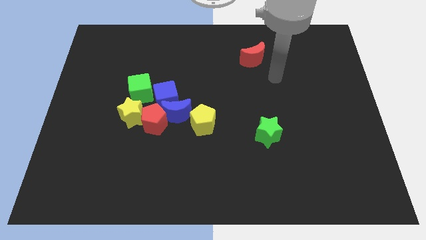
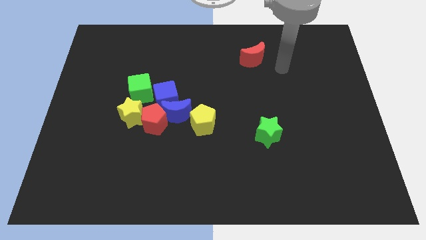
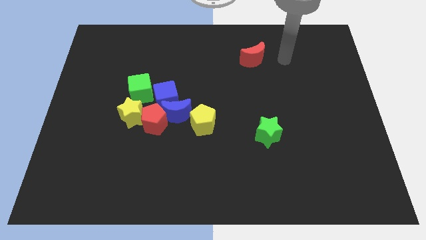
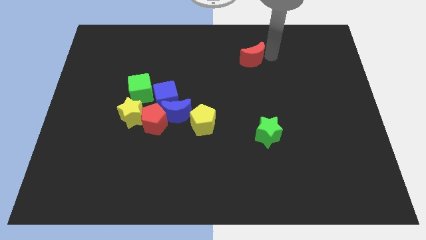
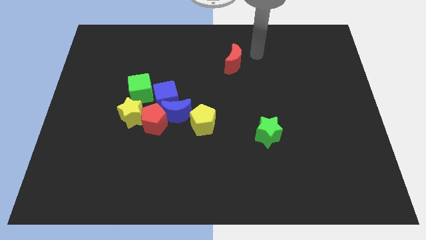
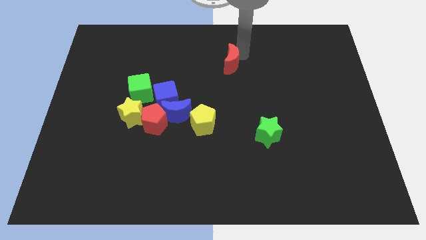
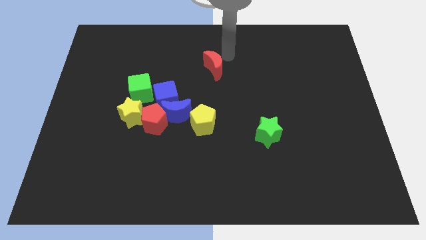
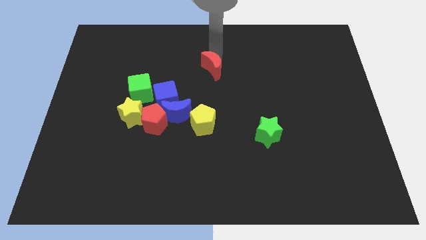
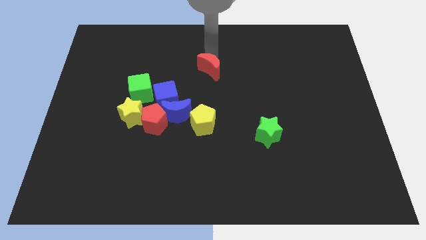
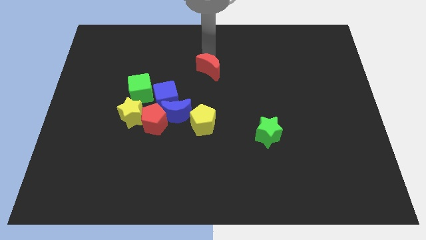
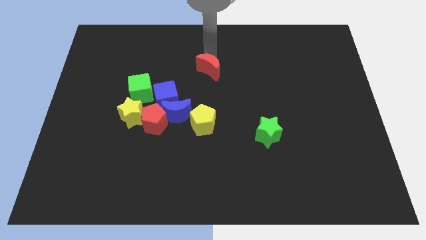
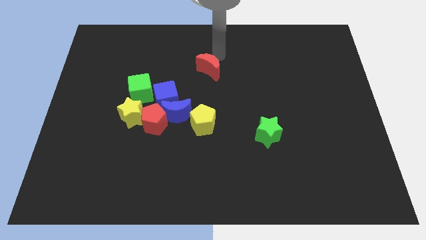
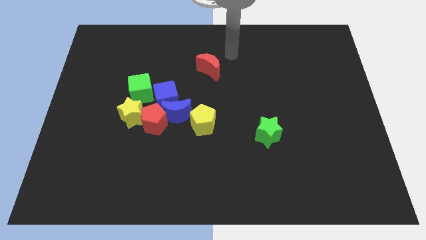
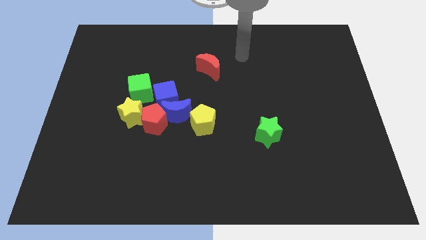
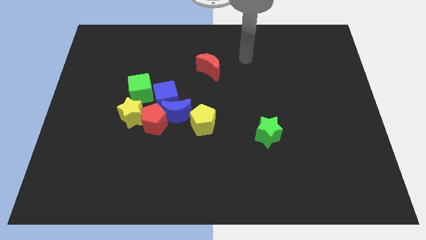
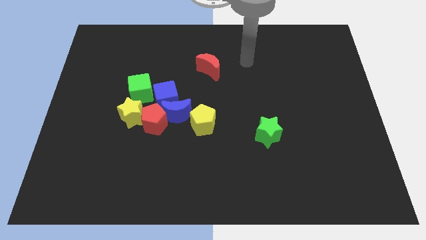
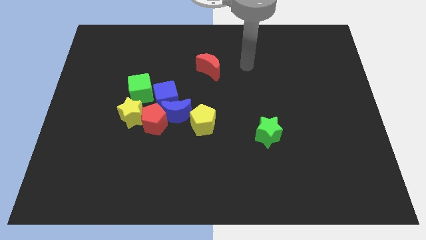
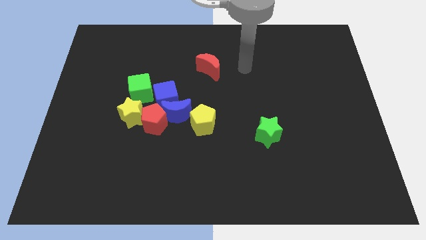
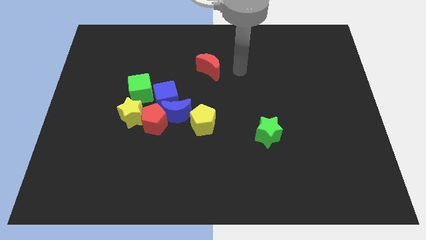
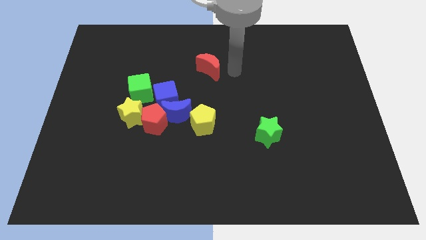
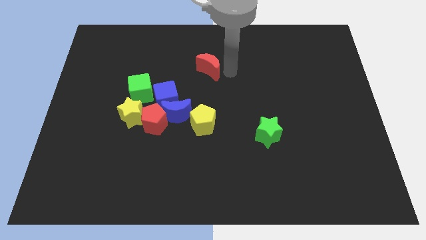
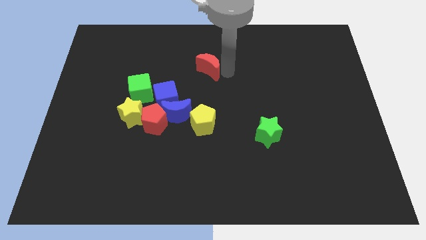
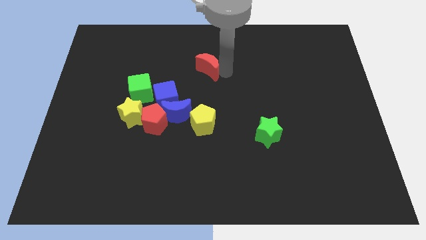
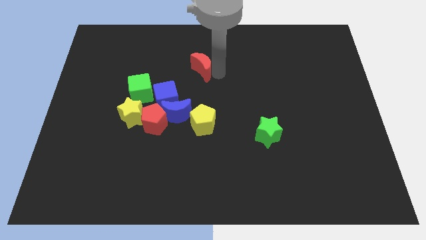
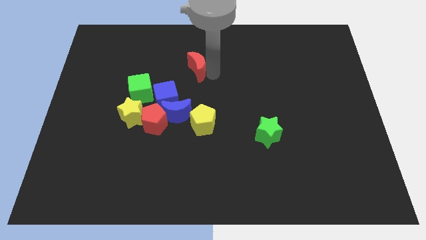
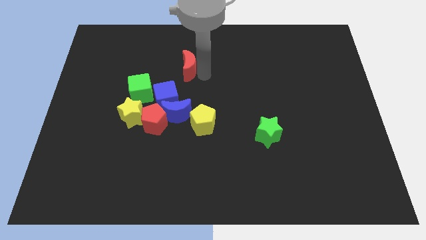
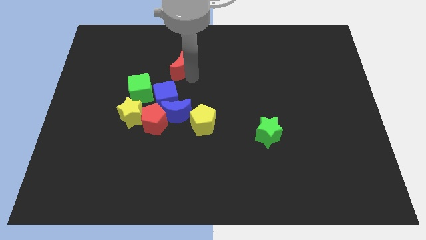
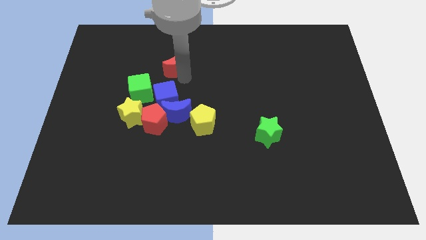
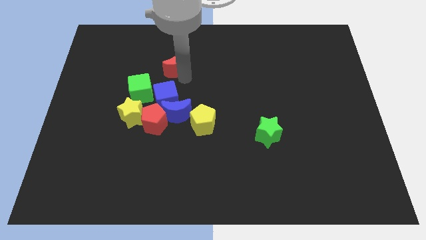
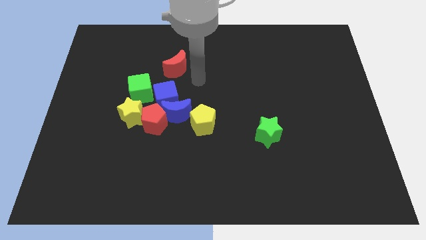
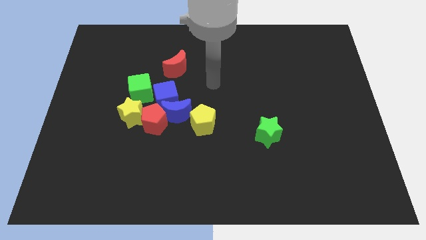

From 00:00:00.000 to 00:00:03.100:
place the red crescent at the top of the blue cube

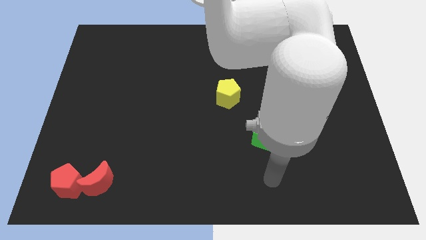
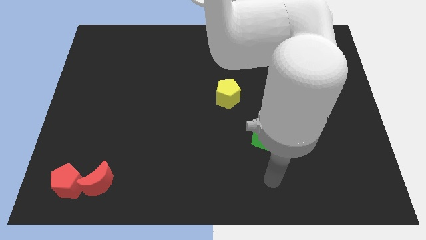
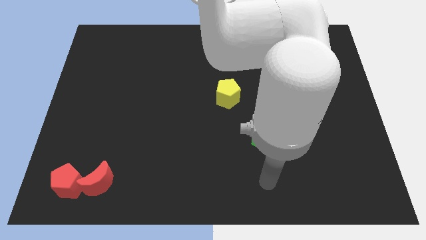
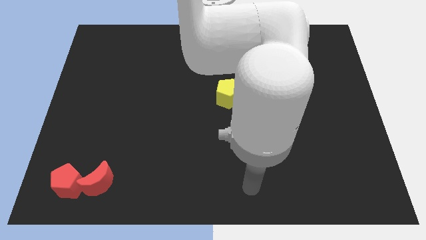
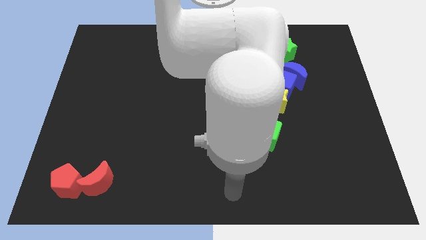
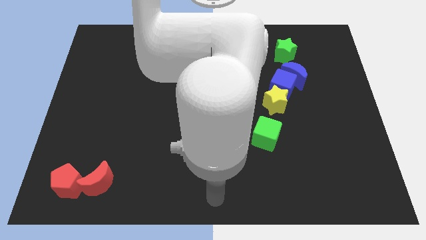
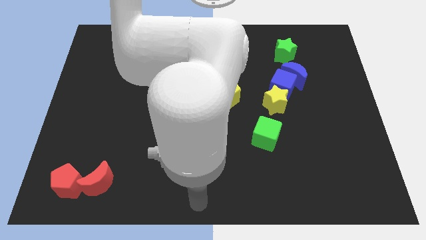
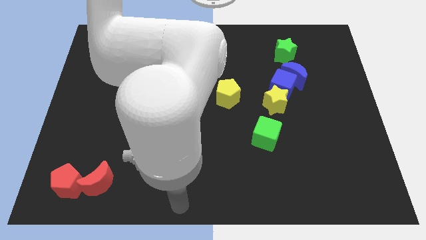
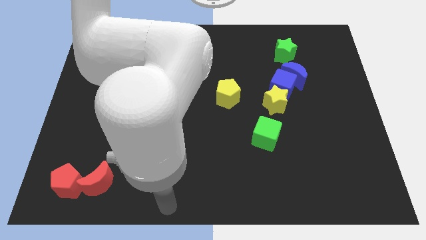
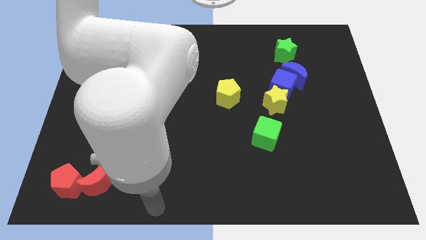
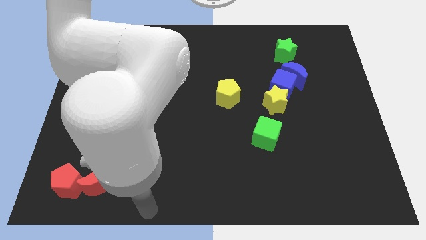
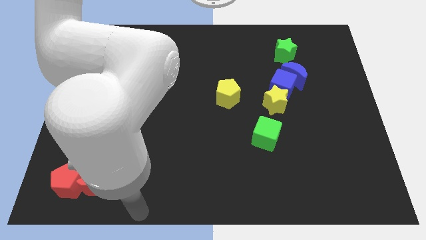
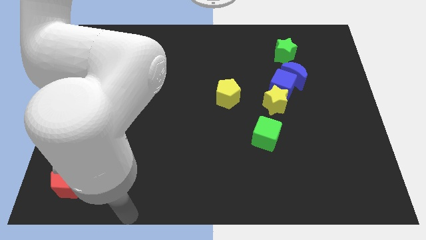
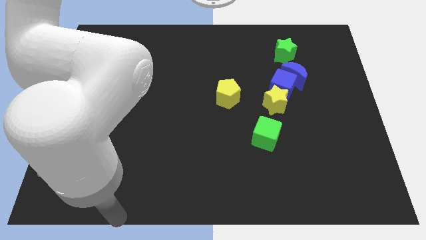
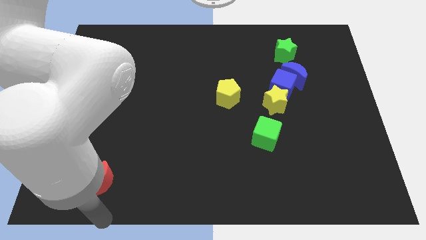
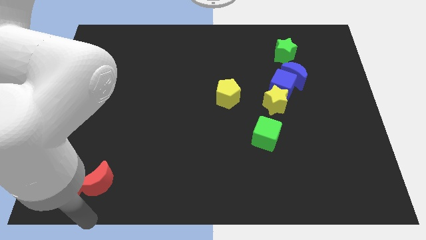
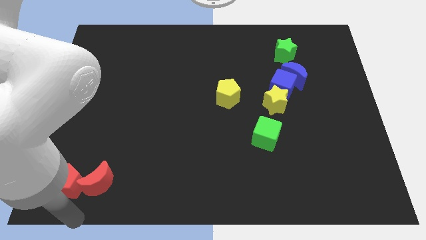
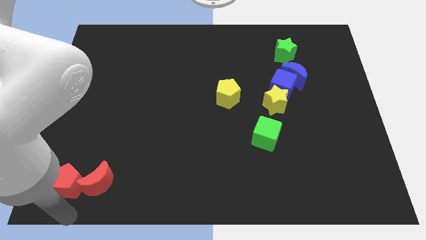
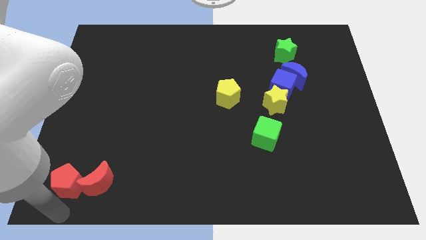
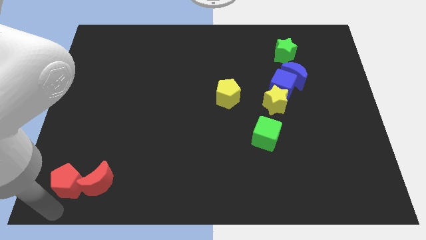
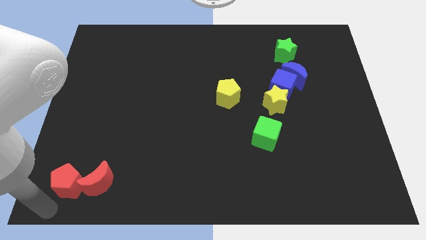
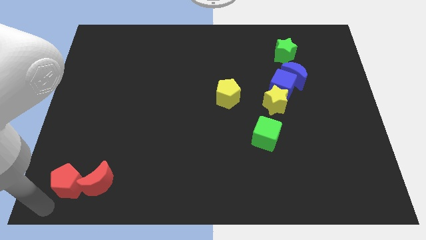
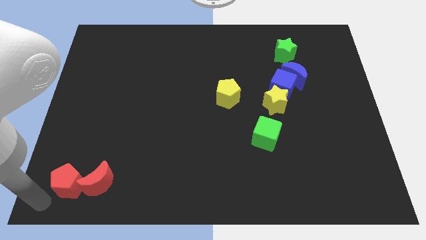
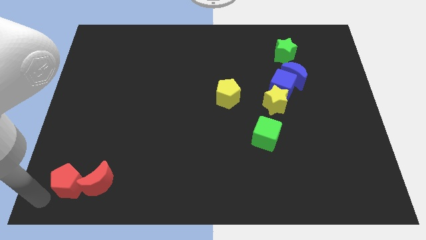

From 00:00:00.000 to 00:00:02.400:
move your arm close to the red pentagon

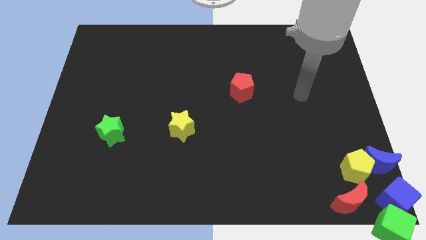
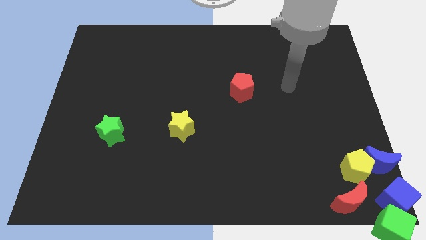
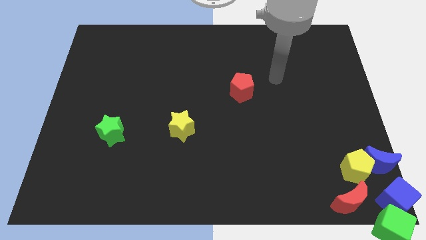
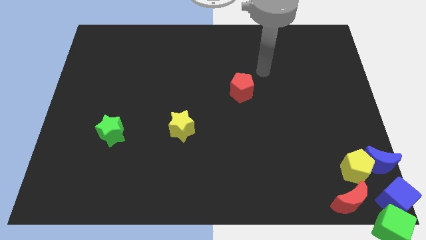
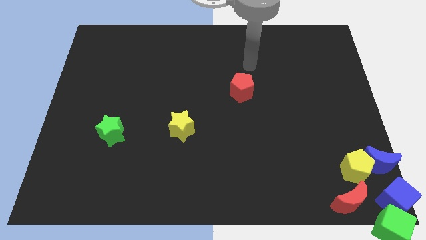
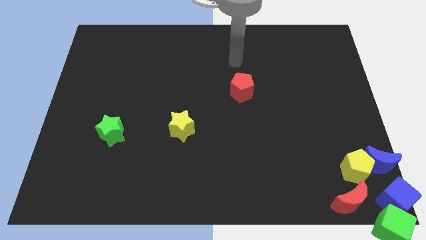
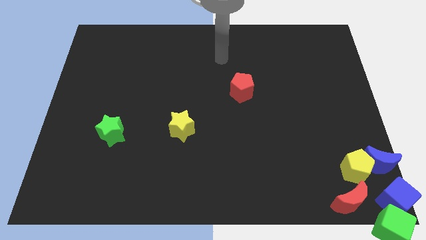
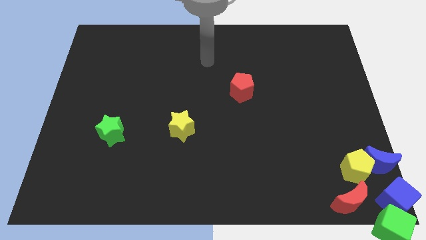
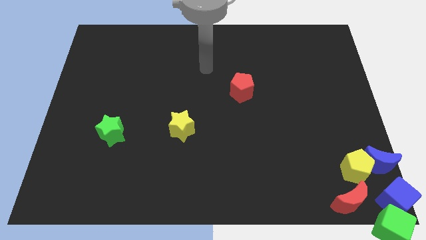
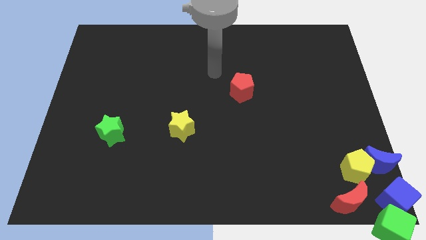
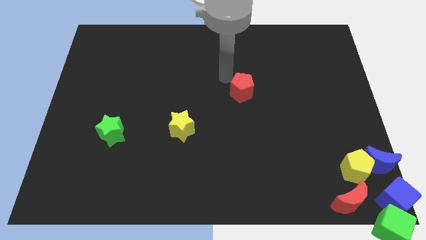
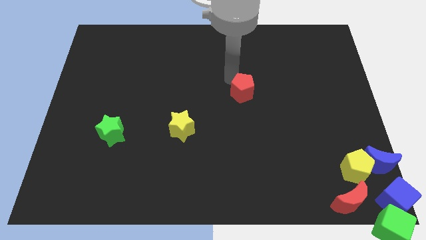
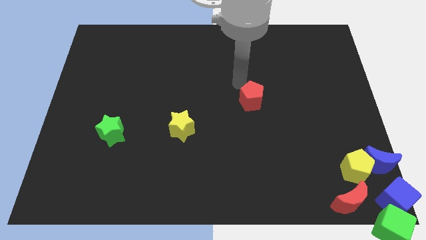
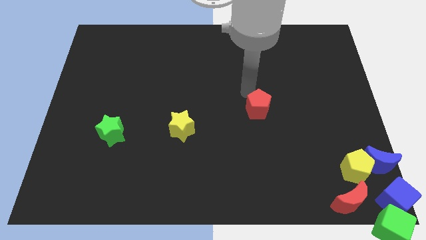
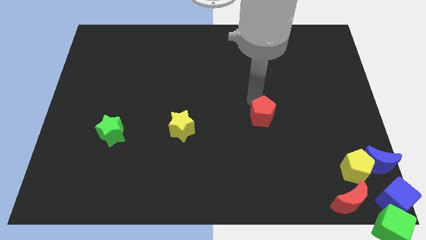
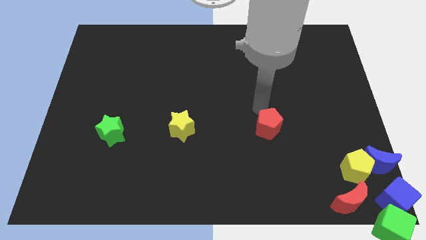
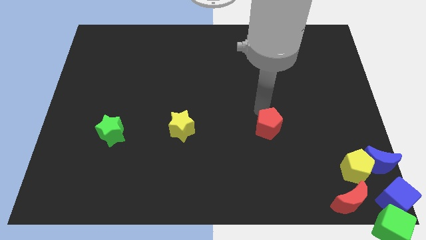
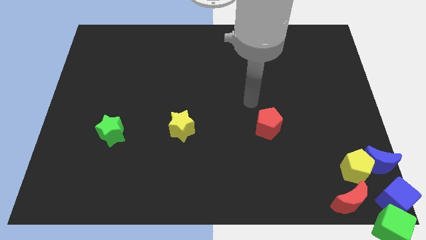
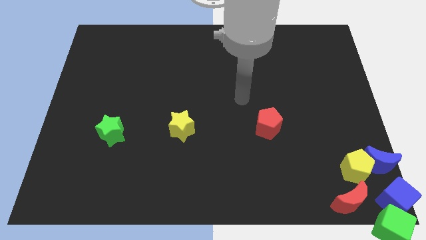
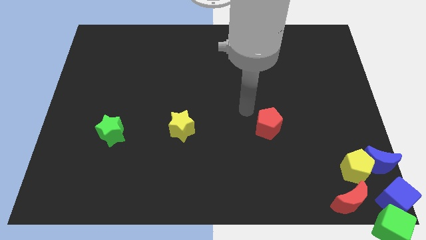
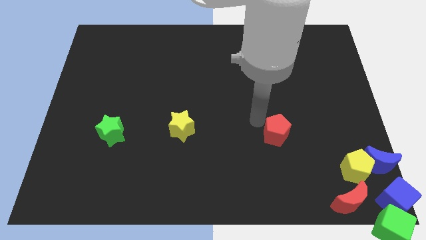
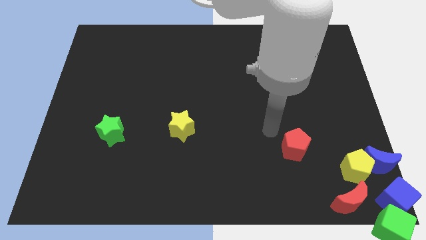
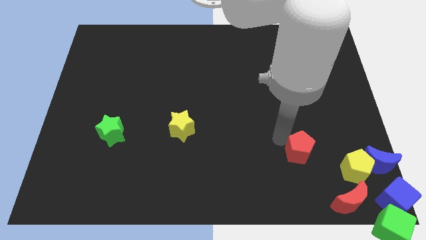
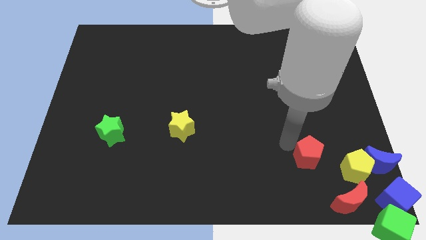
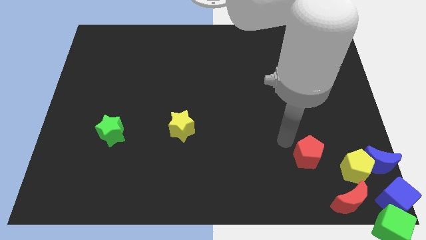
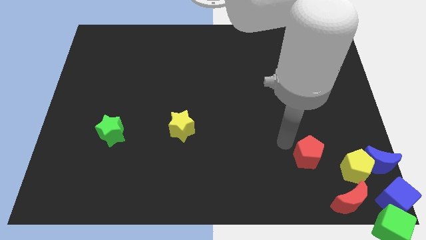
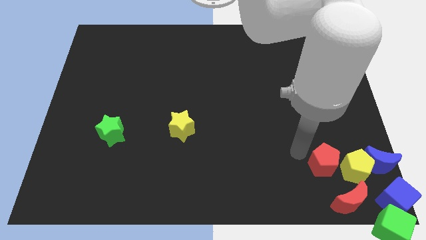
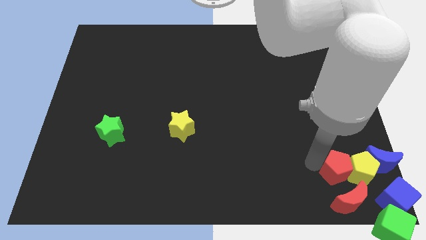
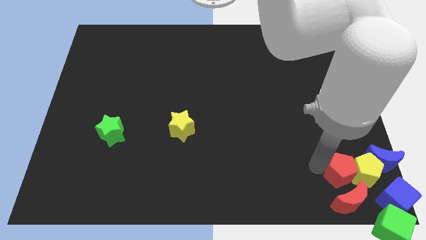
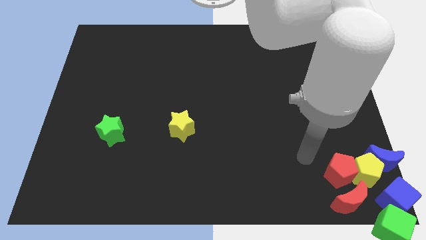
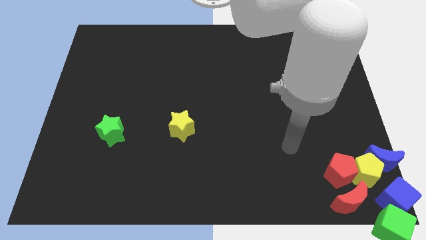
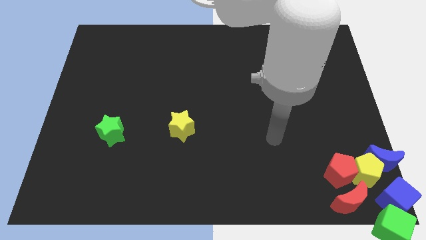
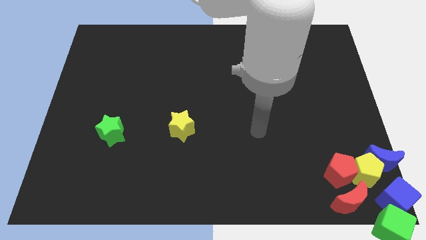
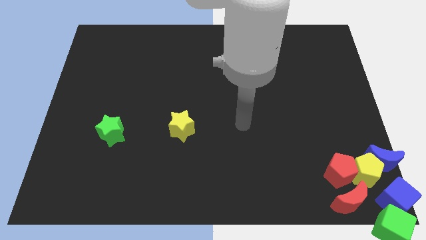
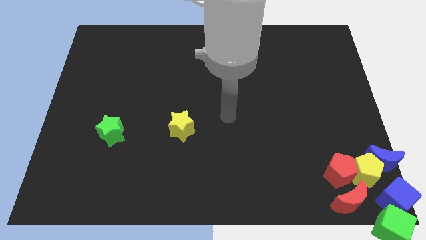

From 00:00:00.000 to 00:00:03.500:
push the red pentagon into yellow pentagon
